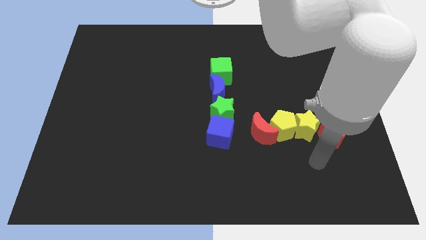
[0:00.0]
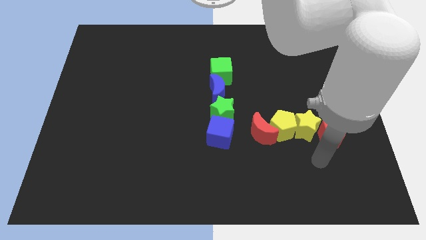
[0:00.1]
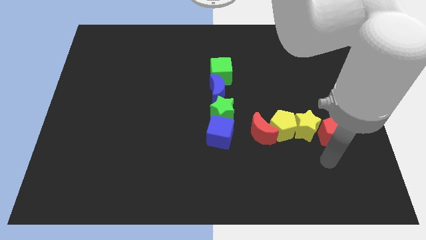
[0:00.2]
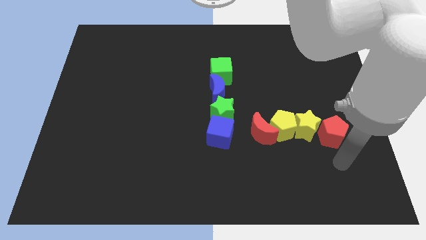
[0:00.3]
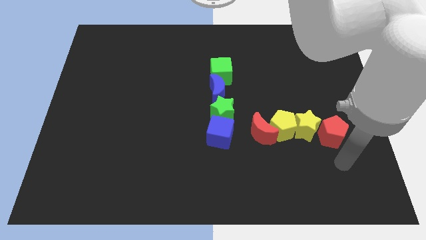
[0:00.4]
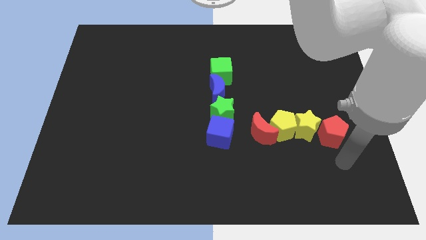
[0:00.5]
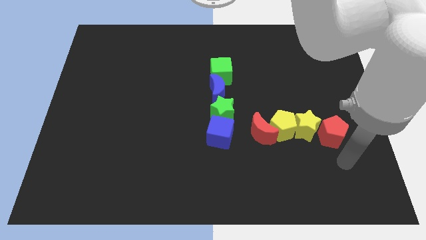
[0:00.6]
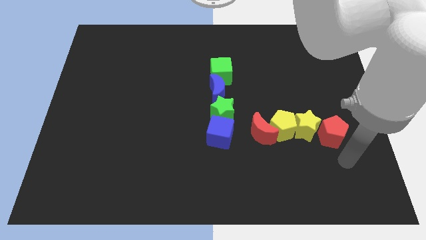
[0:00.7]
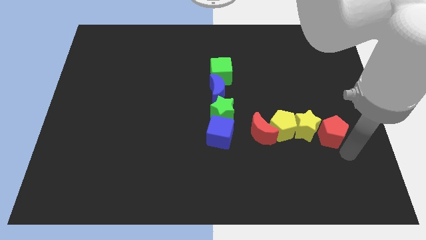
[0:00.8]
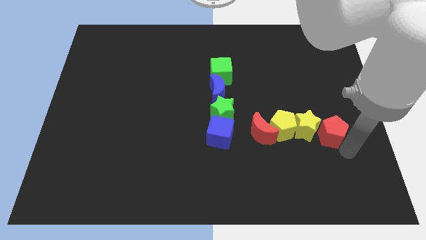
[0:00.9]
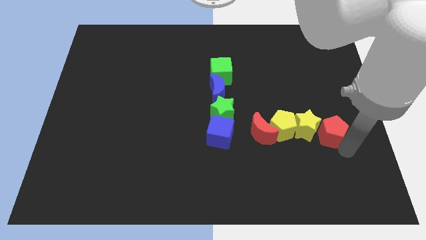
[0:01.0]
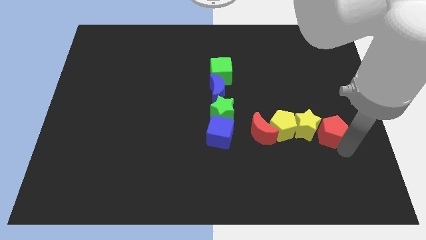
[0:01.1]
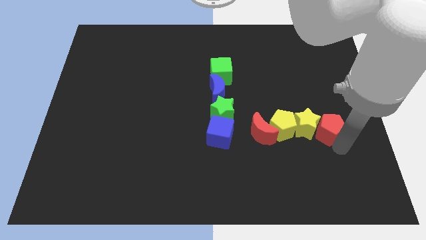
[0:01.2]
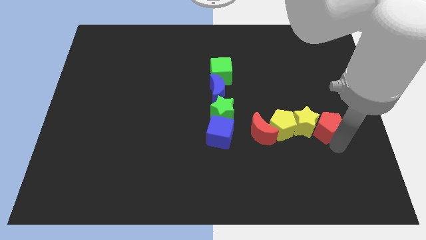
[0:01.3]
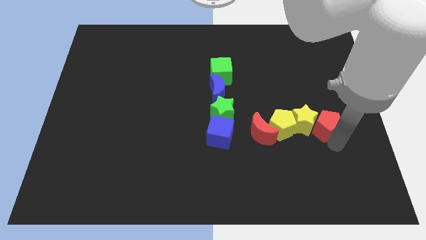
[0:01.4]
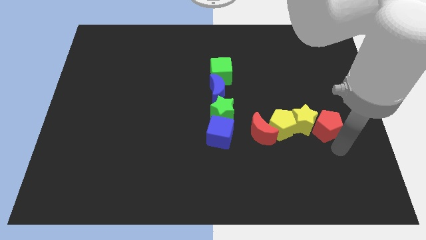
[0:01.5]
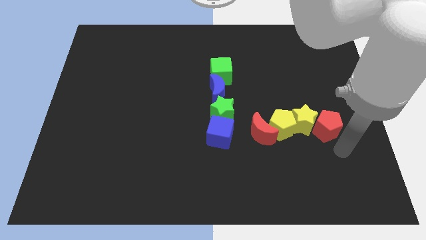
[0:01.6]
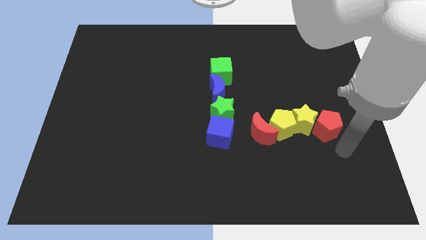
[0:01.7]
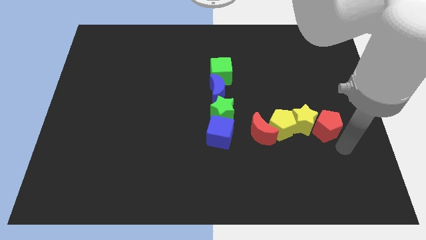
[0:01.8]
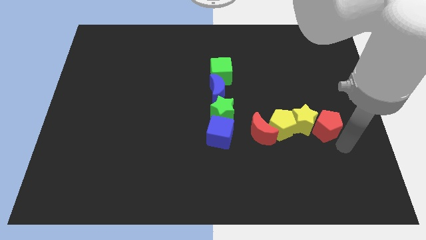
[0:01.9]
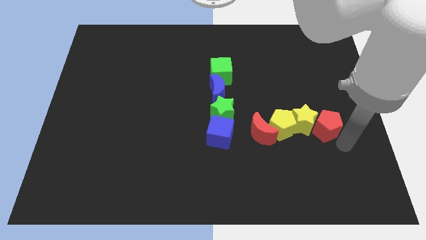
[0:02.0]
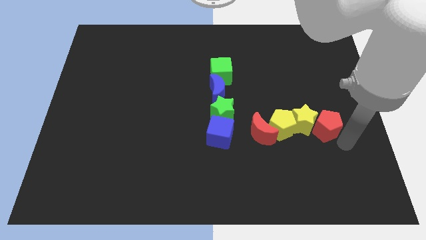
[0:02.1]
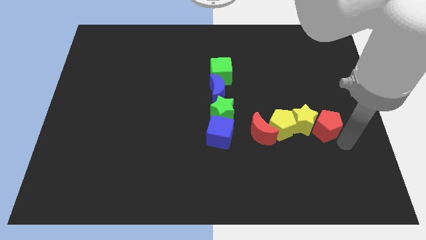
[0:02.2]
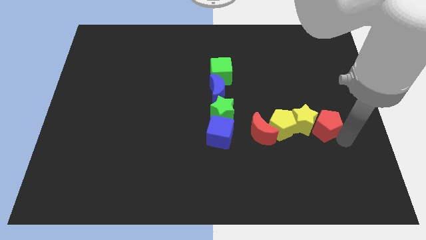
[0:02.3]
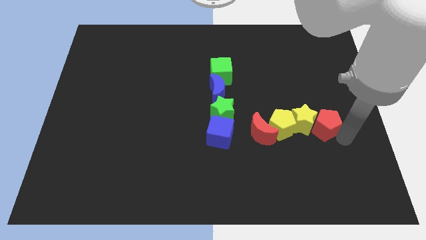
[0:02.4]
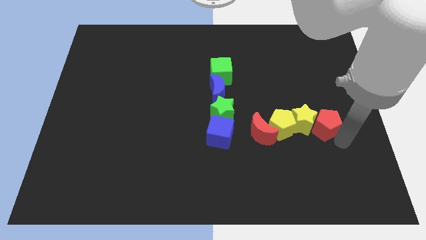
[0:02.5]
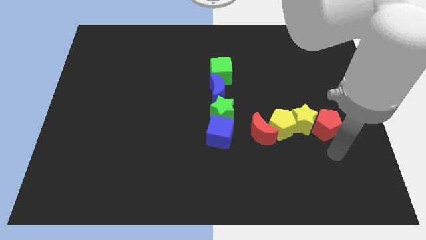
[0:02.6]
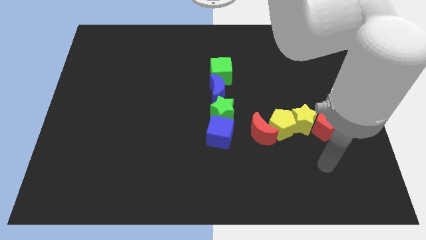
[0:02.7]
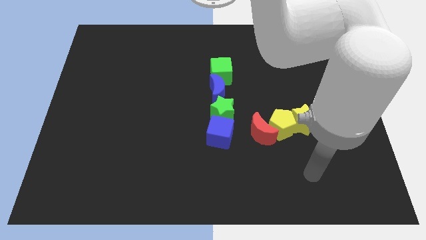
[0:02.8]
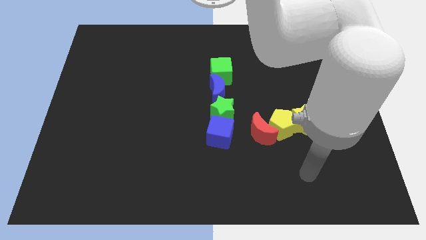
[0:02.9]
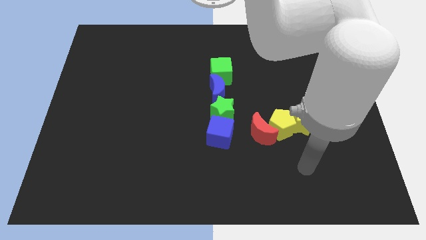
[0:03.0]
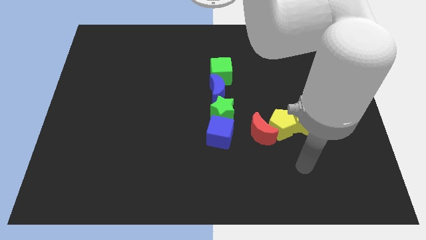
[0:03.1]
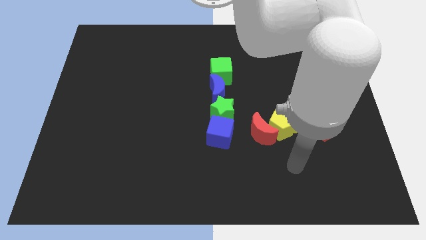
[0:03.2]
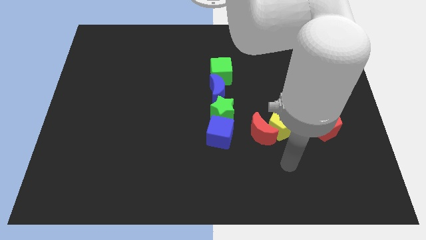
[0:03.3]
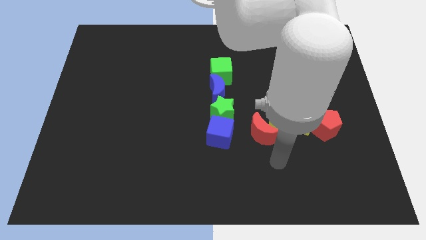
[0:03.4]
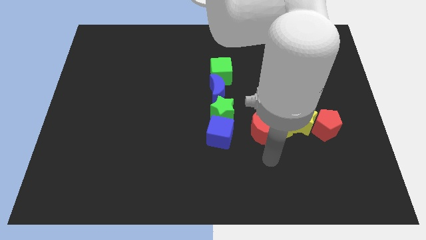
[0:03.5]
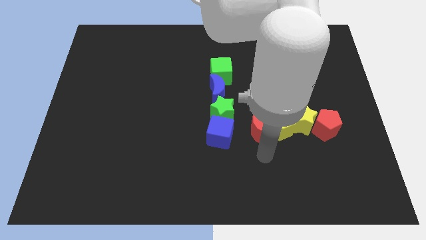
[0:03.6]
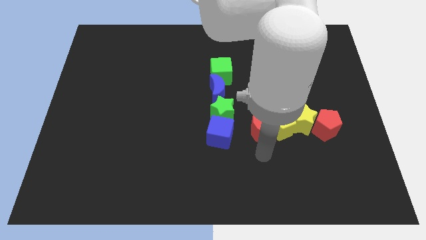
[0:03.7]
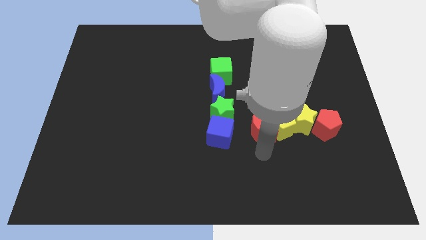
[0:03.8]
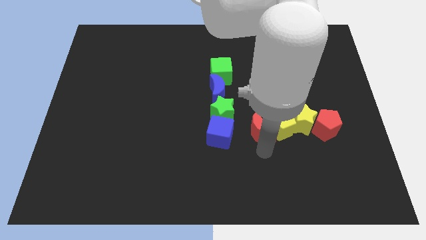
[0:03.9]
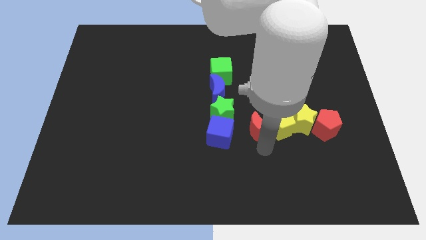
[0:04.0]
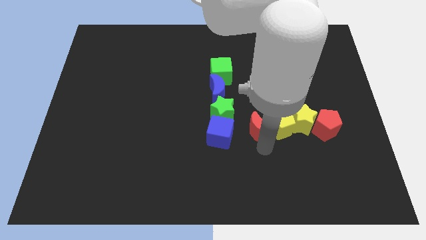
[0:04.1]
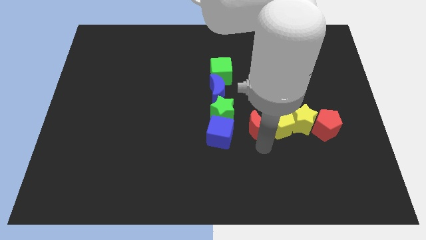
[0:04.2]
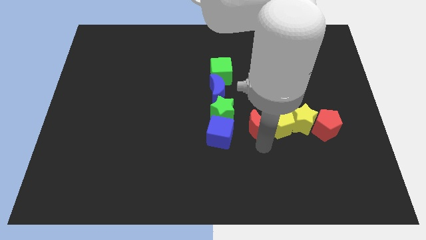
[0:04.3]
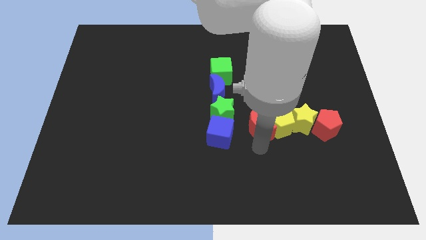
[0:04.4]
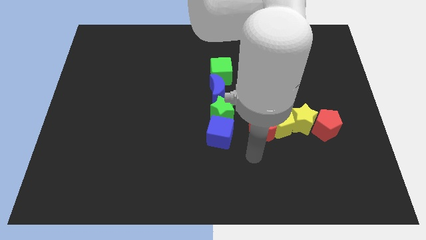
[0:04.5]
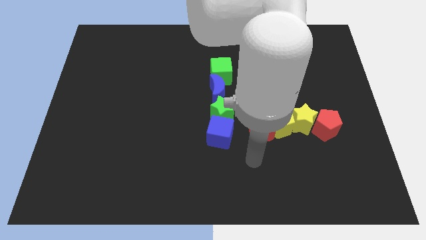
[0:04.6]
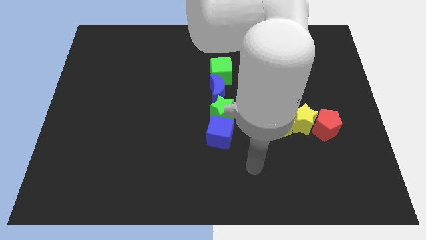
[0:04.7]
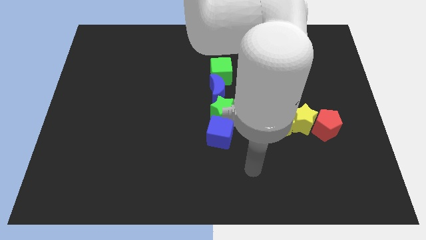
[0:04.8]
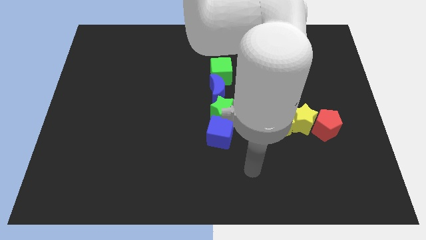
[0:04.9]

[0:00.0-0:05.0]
place red crescent and red pentagon properly so that all four blocks make a line

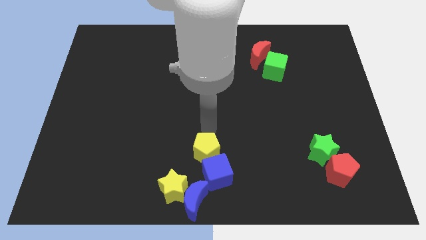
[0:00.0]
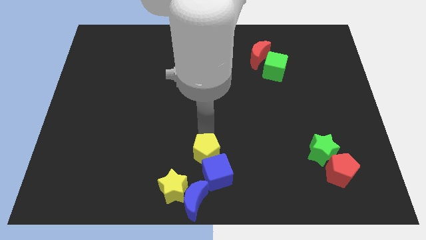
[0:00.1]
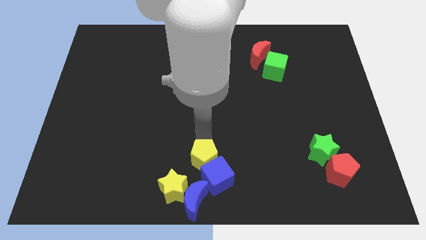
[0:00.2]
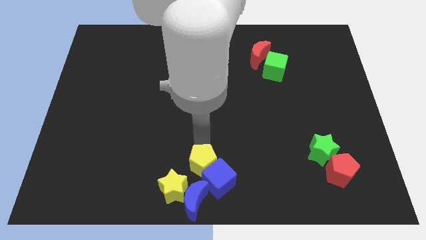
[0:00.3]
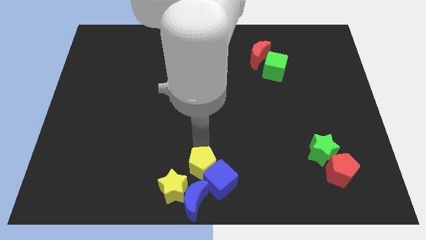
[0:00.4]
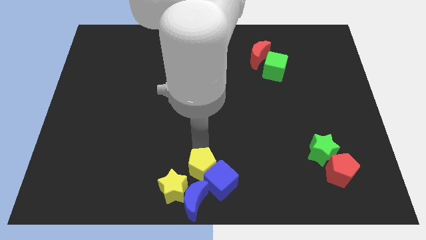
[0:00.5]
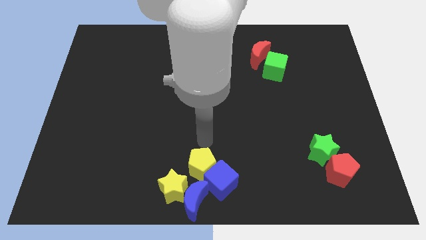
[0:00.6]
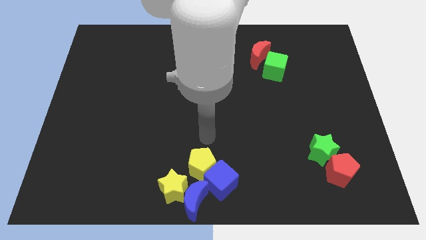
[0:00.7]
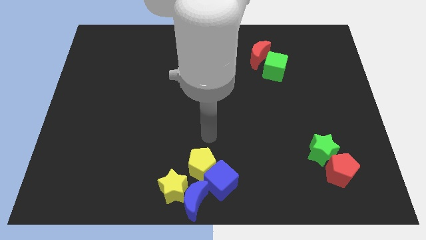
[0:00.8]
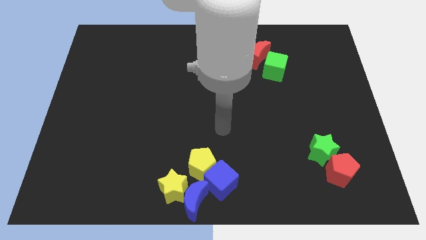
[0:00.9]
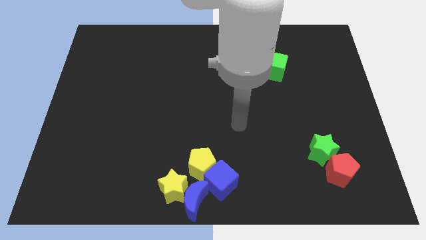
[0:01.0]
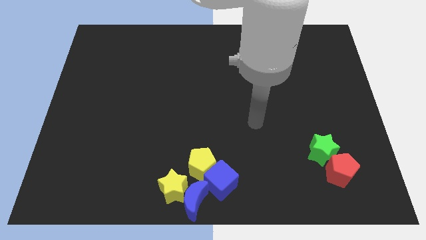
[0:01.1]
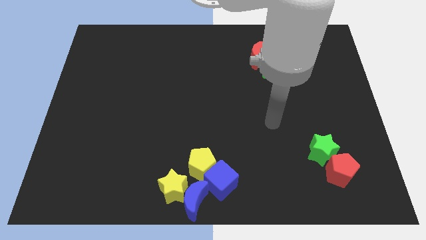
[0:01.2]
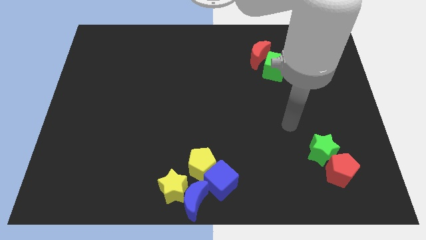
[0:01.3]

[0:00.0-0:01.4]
push yellow pentagon into blue cube

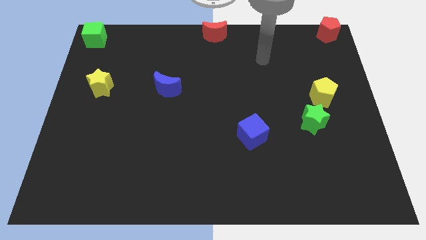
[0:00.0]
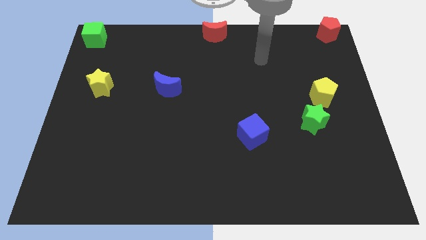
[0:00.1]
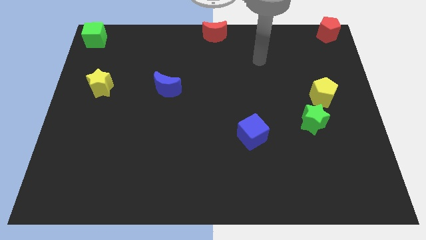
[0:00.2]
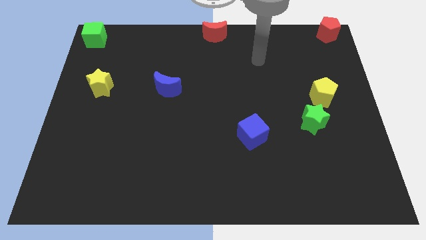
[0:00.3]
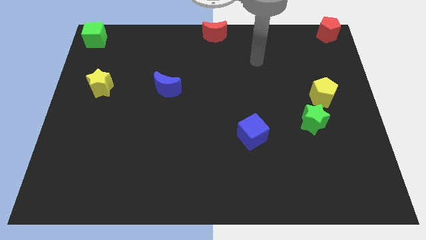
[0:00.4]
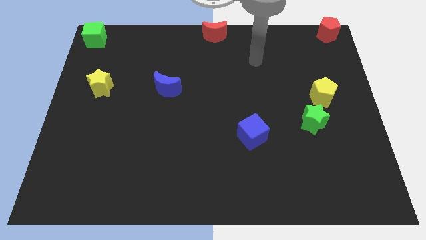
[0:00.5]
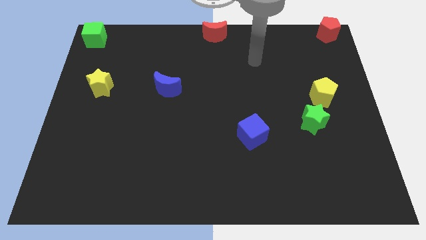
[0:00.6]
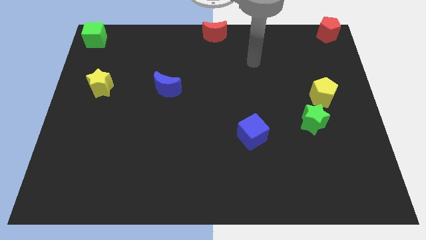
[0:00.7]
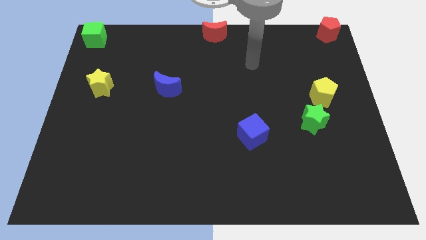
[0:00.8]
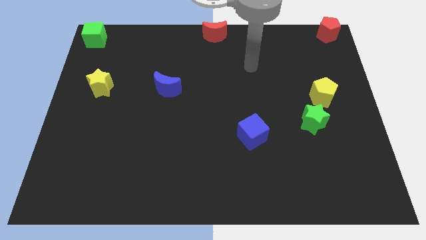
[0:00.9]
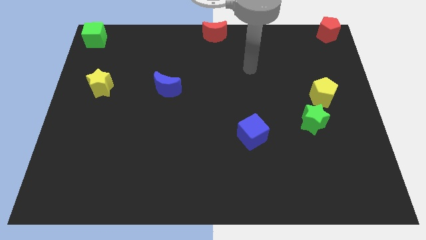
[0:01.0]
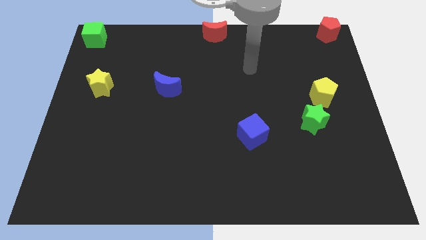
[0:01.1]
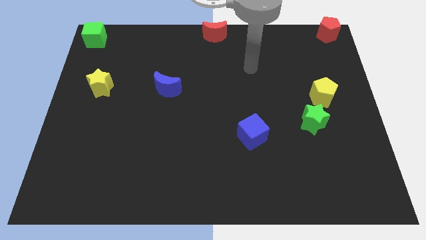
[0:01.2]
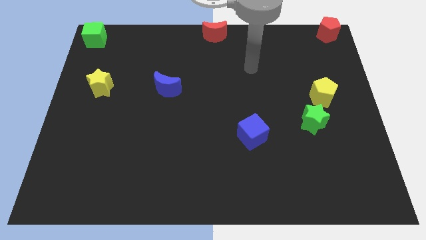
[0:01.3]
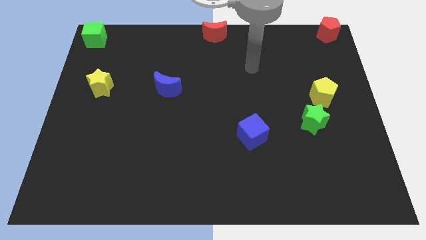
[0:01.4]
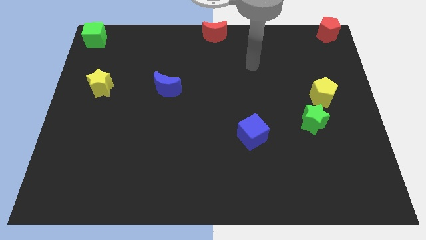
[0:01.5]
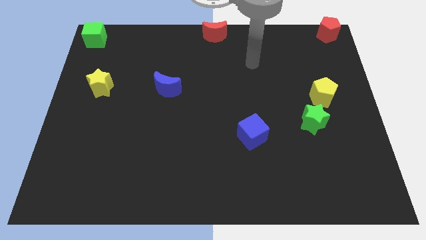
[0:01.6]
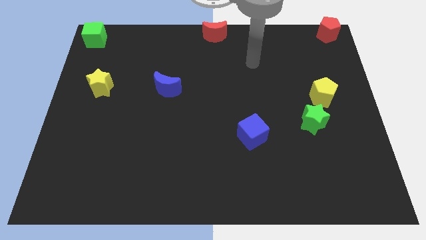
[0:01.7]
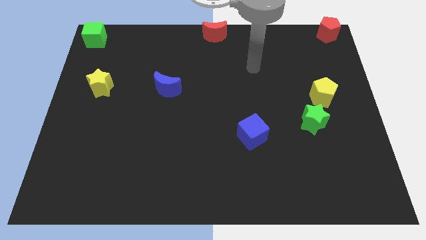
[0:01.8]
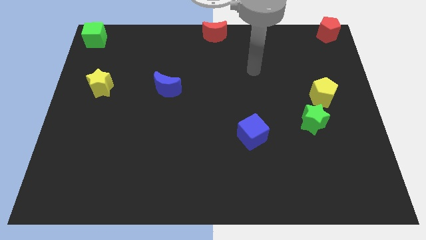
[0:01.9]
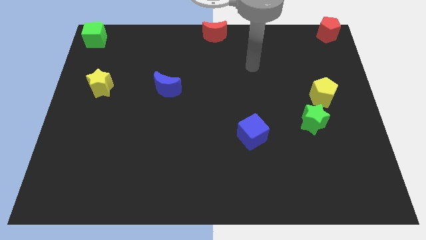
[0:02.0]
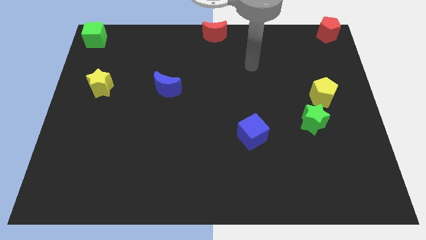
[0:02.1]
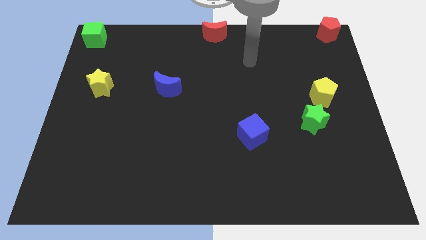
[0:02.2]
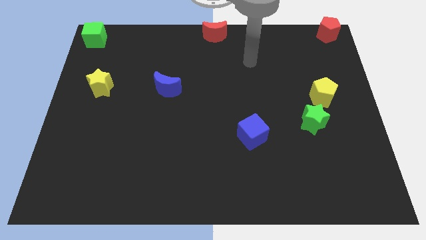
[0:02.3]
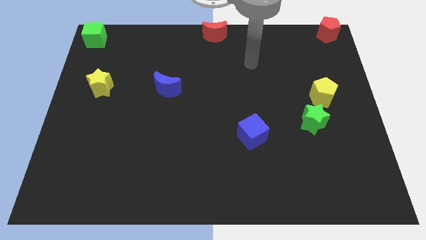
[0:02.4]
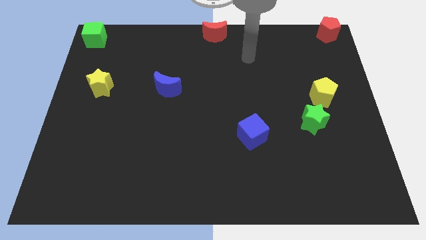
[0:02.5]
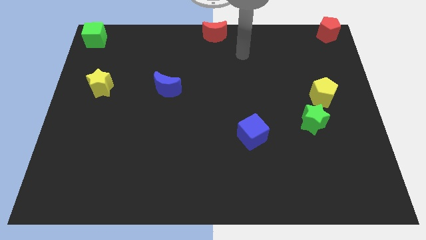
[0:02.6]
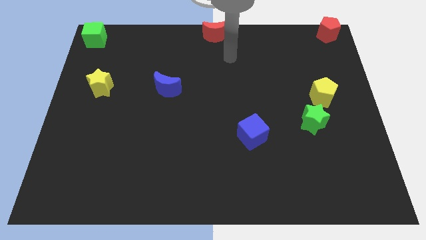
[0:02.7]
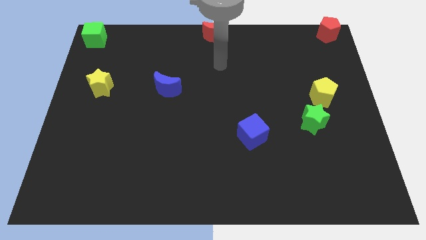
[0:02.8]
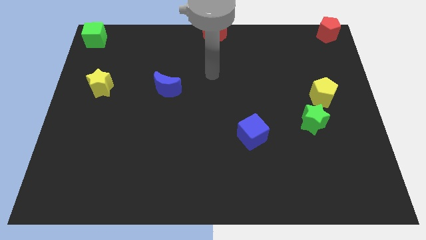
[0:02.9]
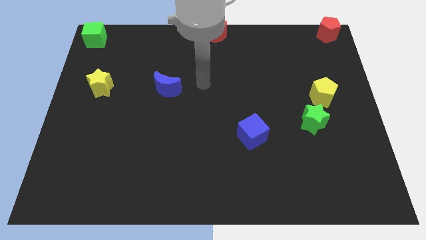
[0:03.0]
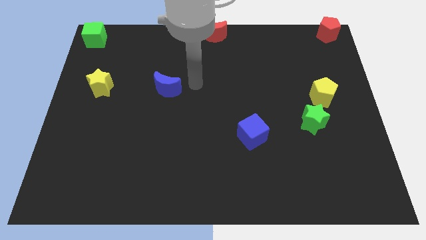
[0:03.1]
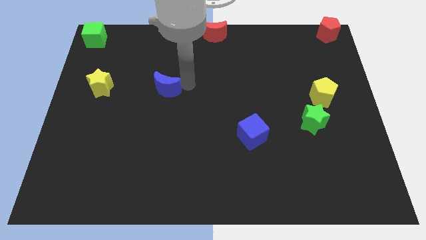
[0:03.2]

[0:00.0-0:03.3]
move your arm close to the blue moon
